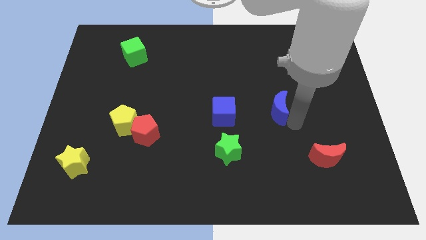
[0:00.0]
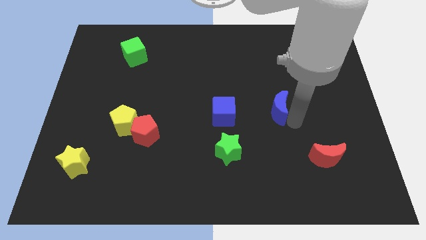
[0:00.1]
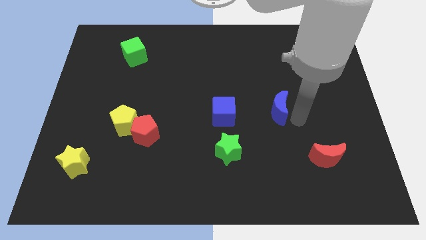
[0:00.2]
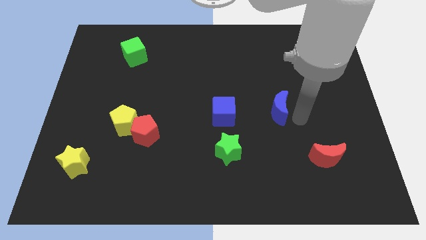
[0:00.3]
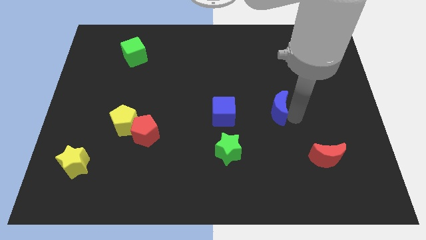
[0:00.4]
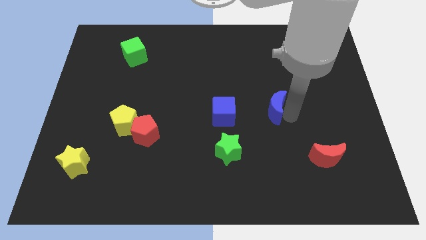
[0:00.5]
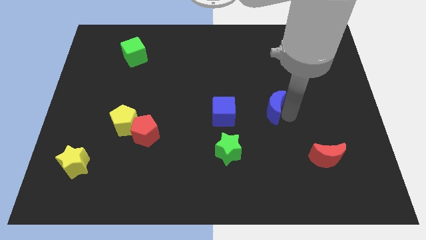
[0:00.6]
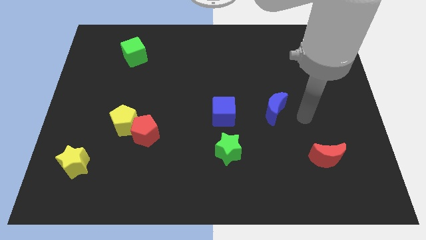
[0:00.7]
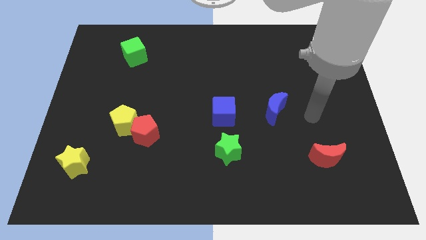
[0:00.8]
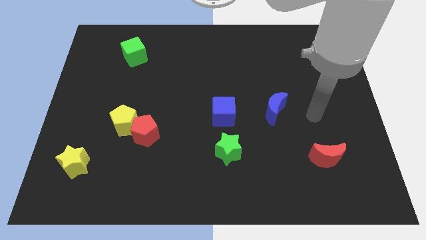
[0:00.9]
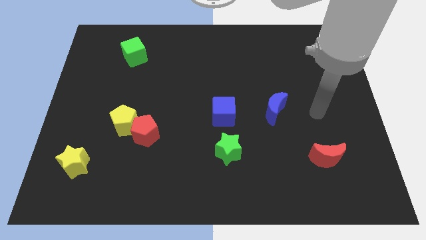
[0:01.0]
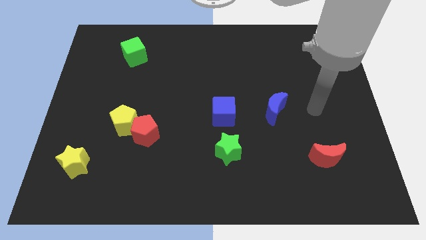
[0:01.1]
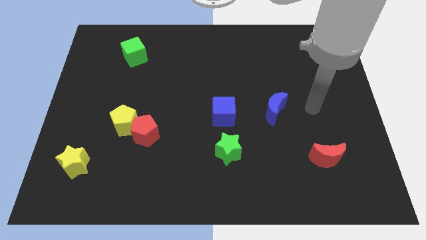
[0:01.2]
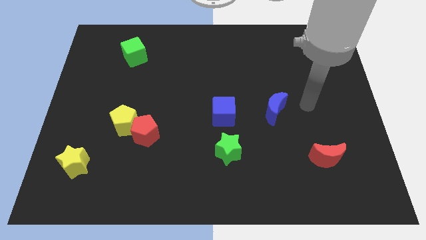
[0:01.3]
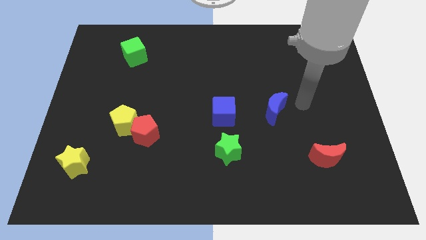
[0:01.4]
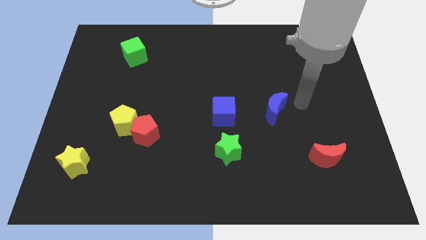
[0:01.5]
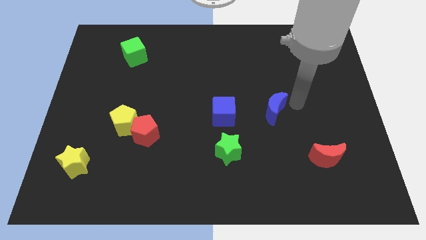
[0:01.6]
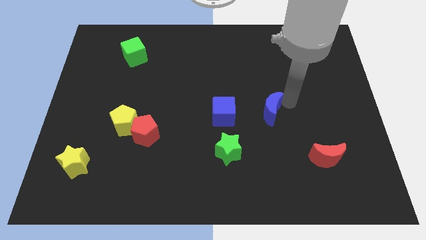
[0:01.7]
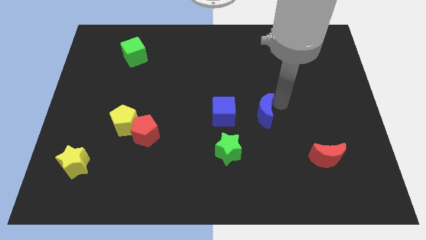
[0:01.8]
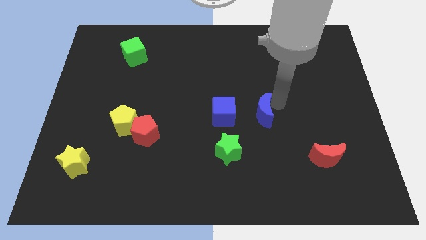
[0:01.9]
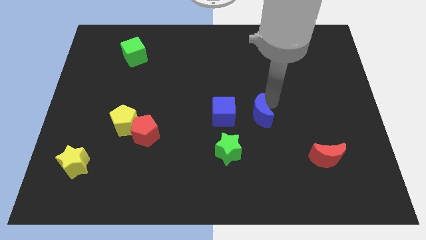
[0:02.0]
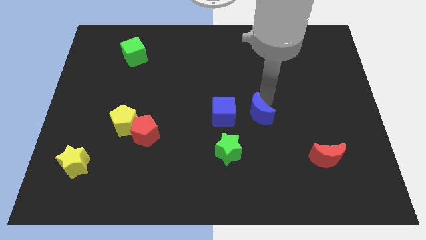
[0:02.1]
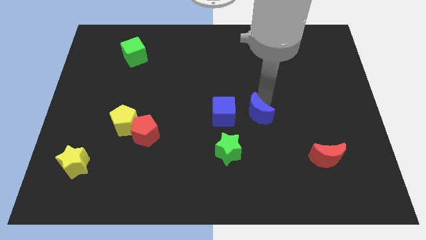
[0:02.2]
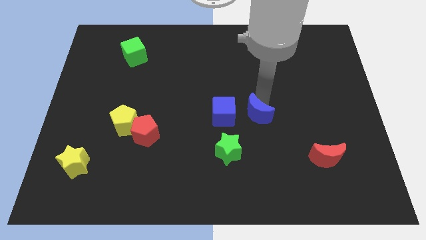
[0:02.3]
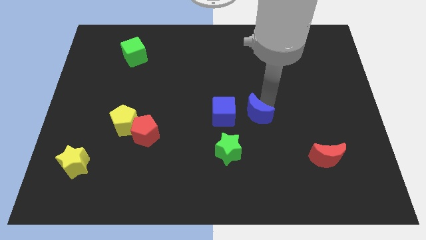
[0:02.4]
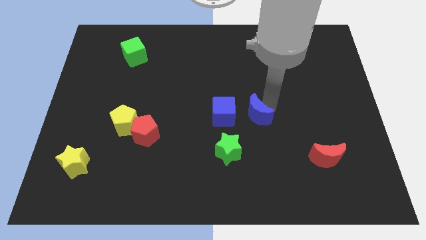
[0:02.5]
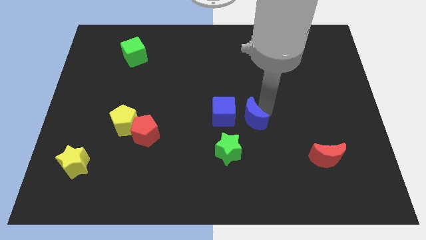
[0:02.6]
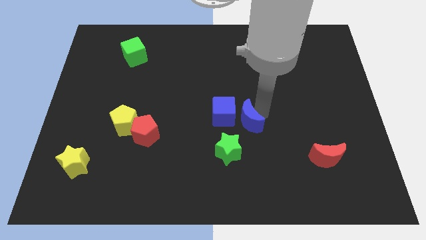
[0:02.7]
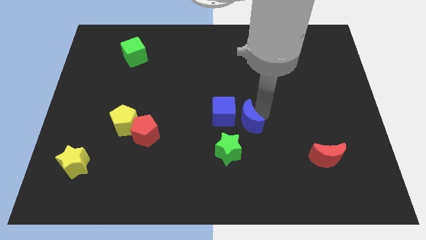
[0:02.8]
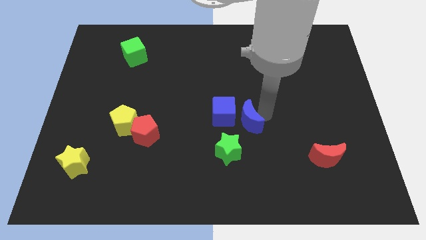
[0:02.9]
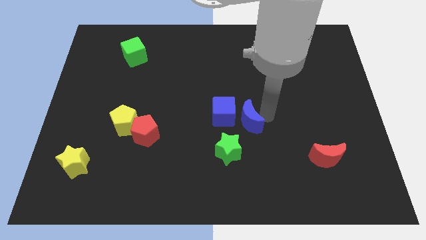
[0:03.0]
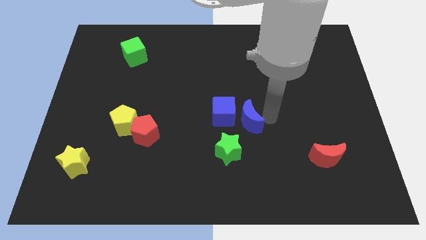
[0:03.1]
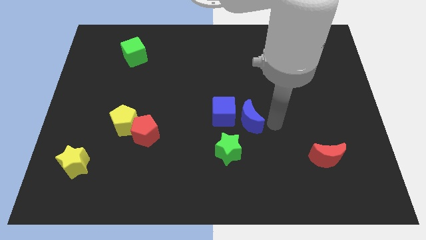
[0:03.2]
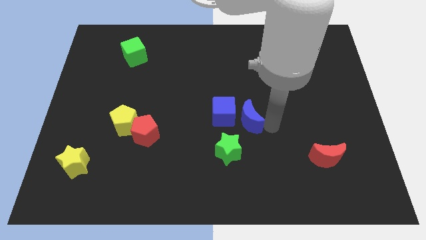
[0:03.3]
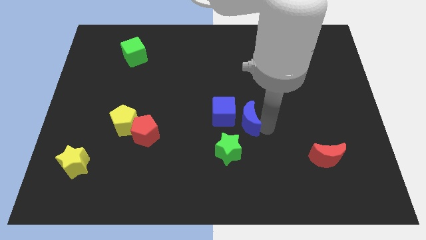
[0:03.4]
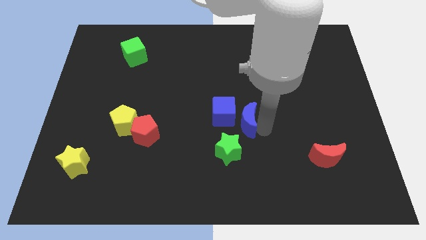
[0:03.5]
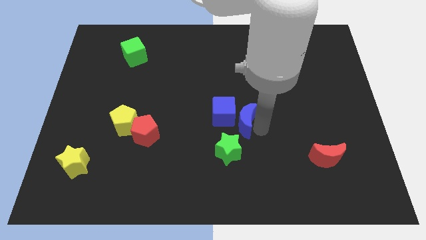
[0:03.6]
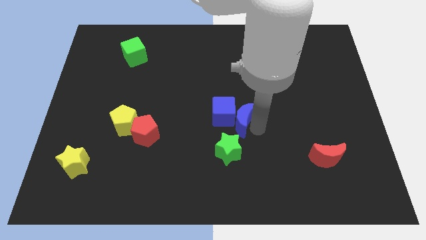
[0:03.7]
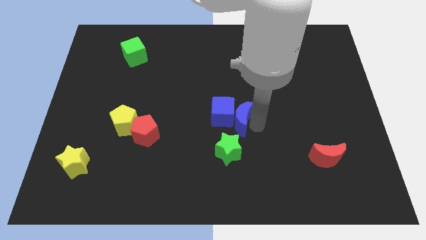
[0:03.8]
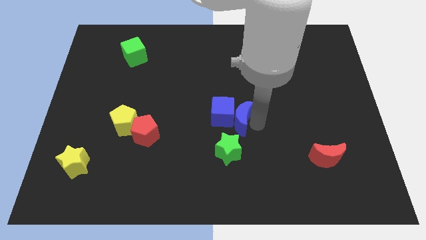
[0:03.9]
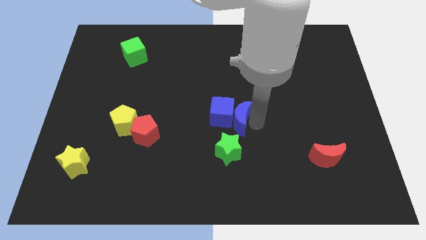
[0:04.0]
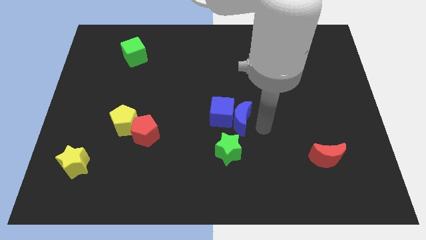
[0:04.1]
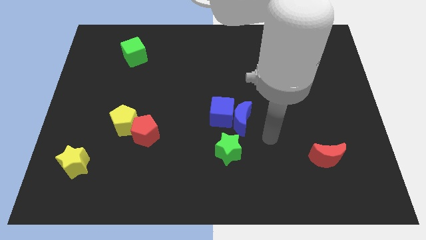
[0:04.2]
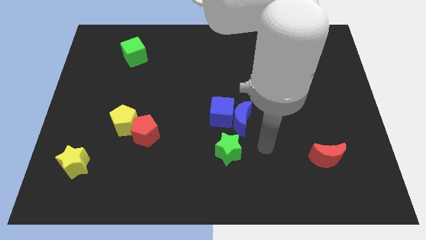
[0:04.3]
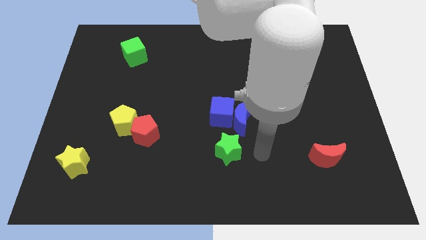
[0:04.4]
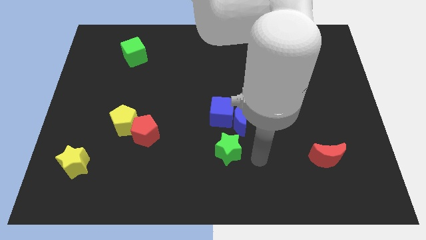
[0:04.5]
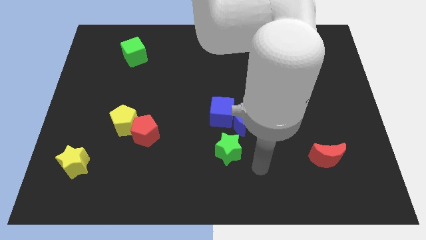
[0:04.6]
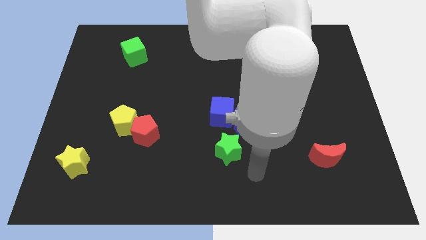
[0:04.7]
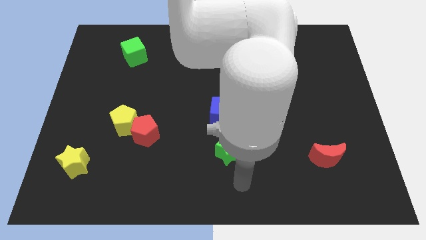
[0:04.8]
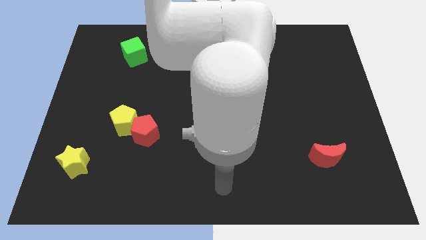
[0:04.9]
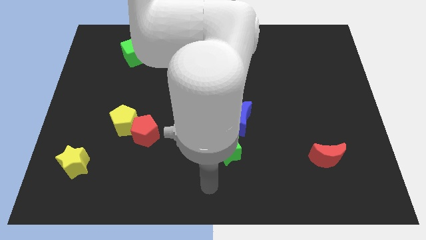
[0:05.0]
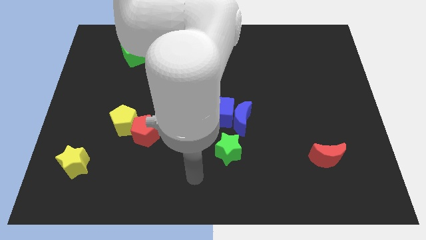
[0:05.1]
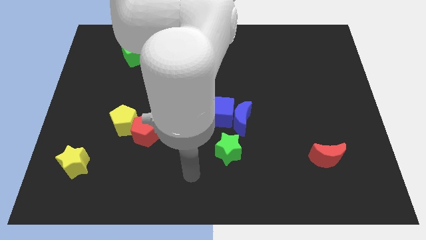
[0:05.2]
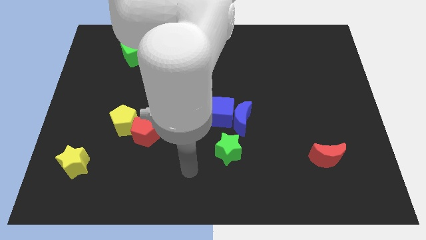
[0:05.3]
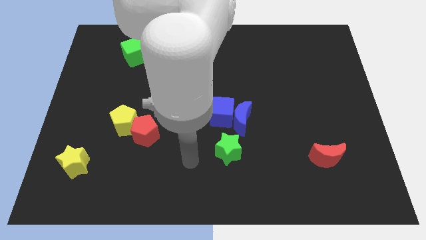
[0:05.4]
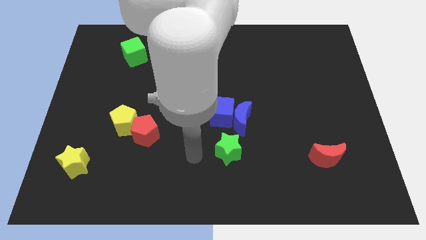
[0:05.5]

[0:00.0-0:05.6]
push the blue crescent into the blue cube

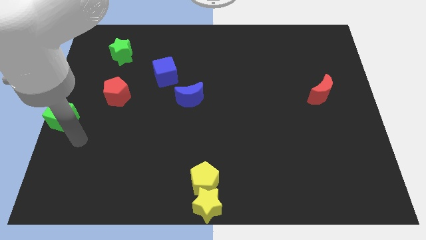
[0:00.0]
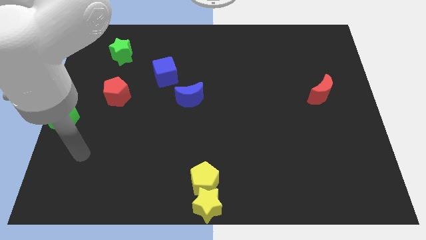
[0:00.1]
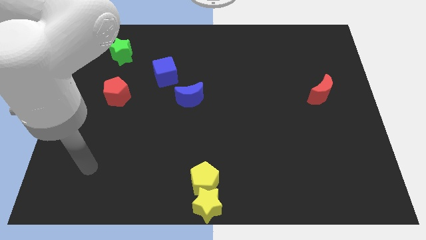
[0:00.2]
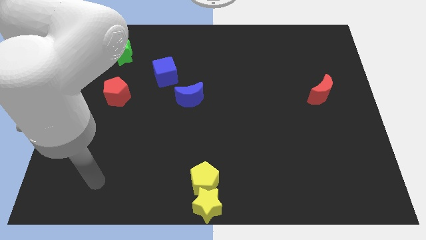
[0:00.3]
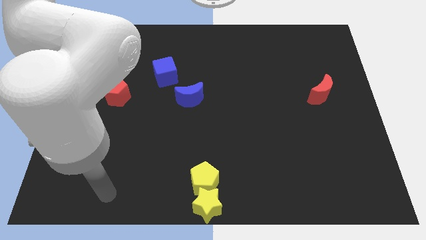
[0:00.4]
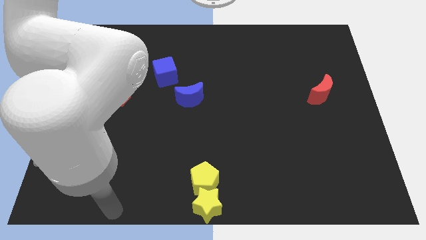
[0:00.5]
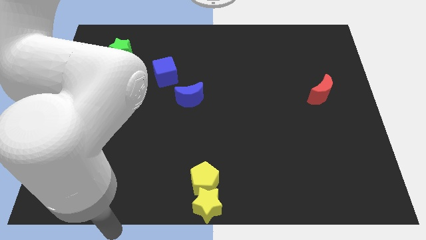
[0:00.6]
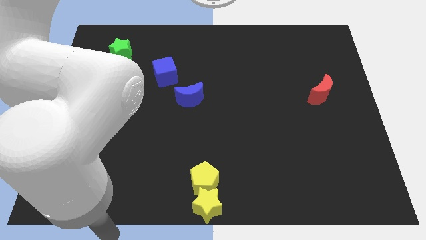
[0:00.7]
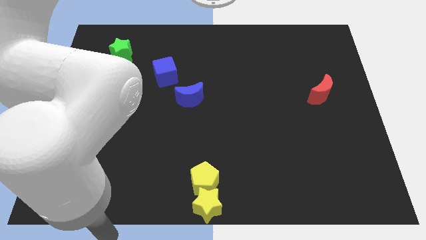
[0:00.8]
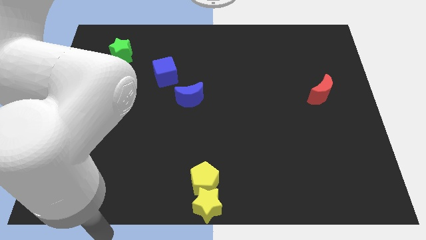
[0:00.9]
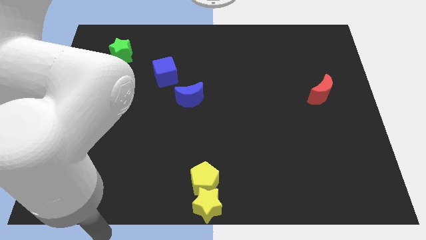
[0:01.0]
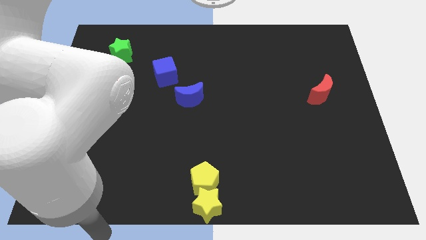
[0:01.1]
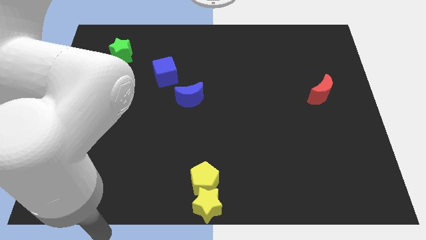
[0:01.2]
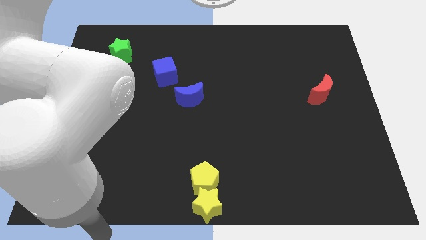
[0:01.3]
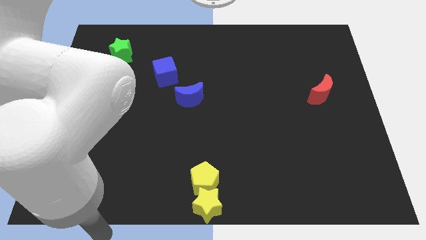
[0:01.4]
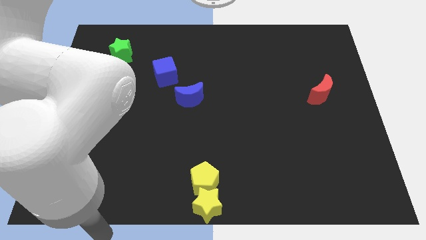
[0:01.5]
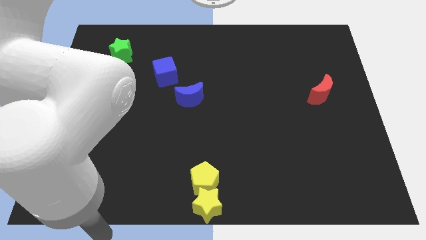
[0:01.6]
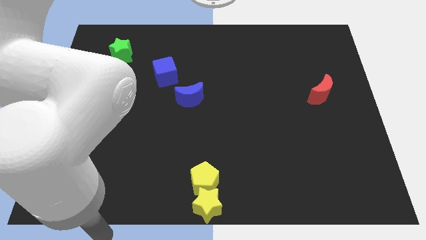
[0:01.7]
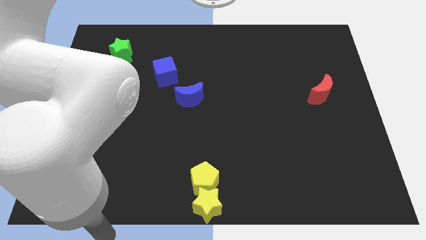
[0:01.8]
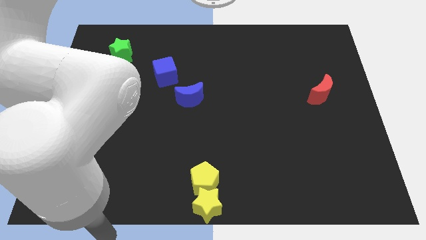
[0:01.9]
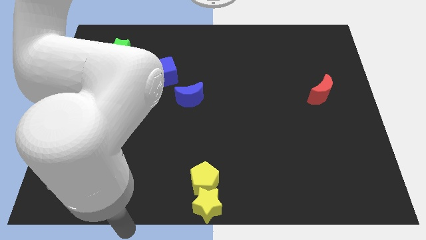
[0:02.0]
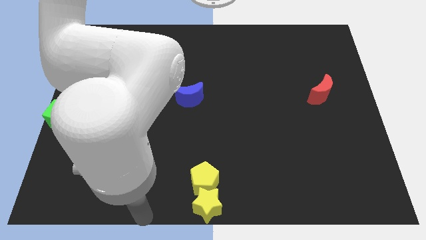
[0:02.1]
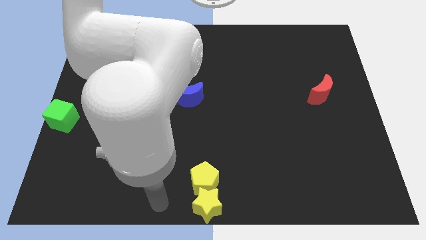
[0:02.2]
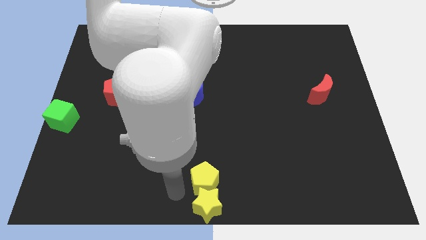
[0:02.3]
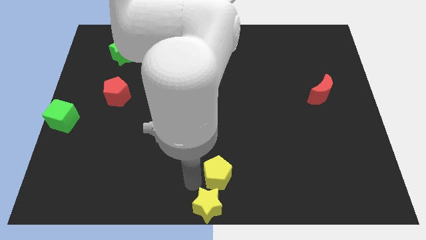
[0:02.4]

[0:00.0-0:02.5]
place the arm to the left of the yellow pentagon

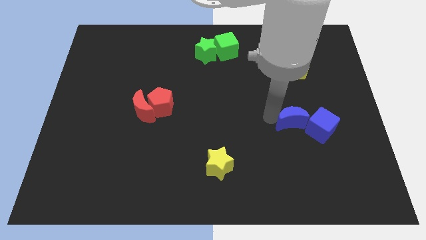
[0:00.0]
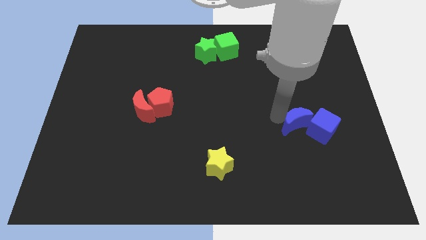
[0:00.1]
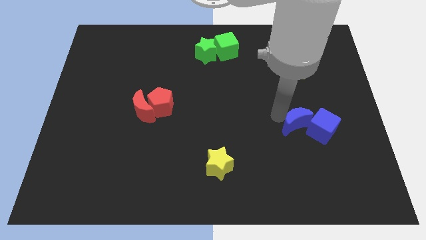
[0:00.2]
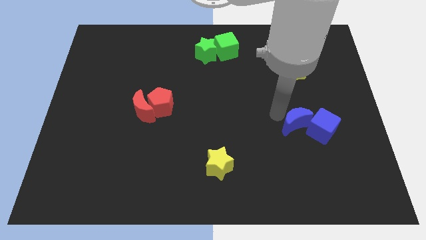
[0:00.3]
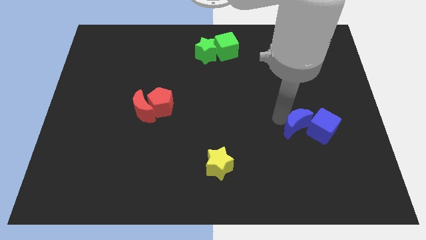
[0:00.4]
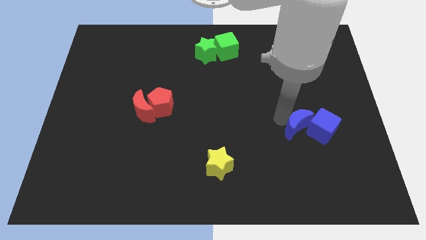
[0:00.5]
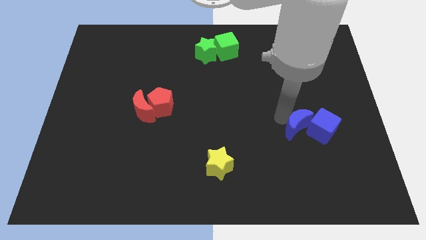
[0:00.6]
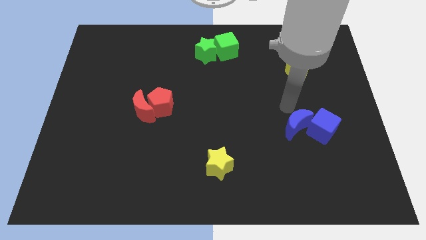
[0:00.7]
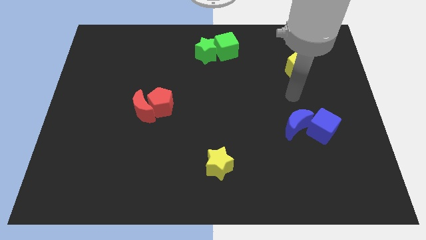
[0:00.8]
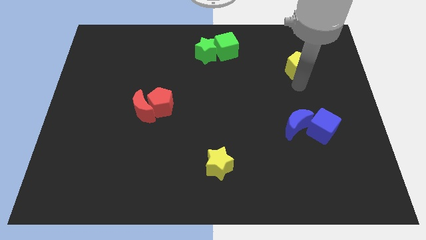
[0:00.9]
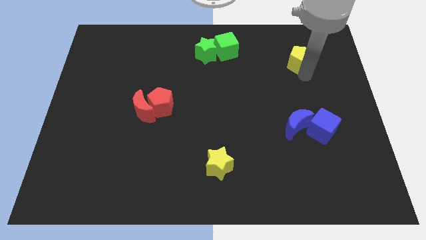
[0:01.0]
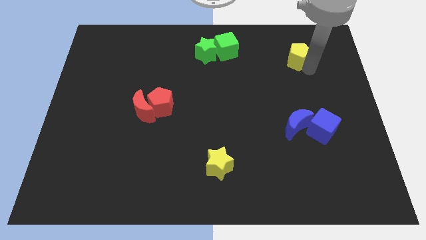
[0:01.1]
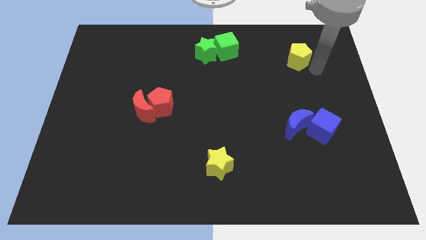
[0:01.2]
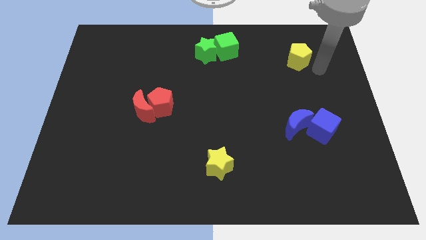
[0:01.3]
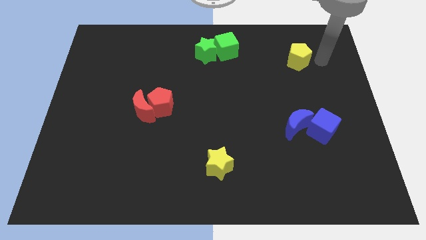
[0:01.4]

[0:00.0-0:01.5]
push blue moon into the blue cube
